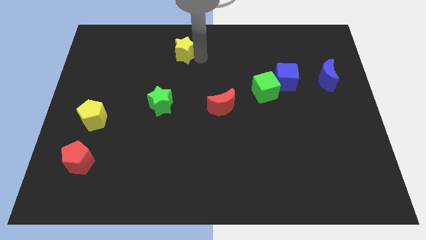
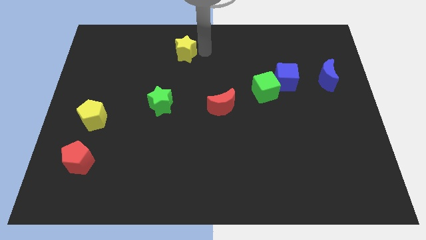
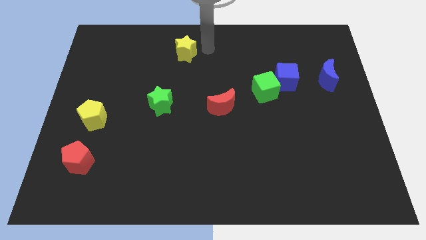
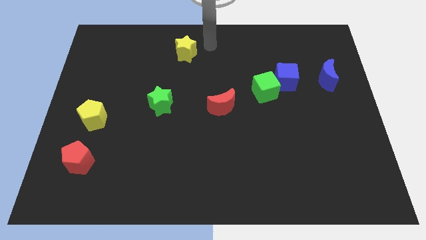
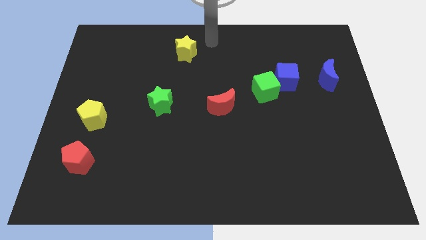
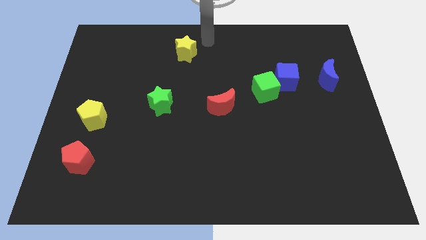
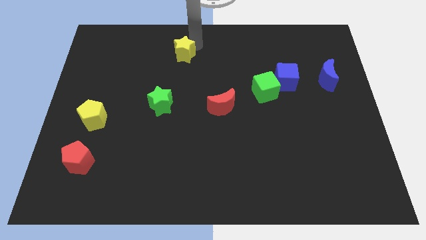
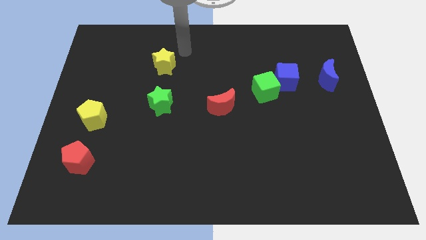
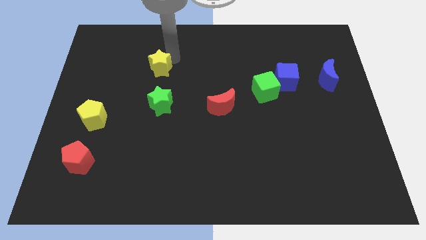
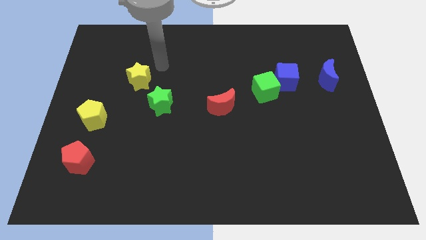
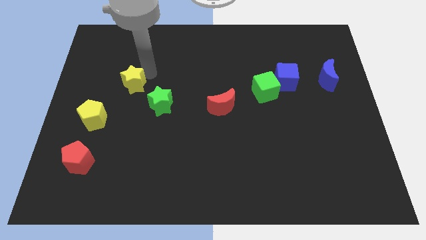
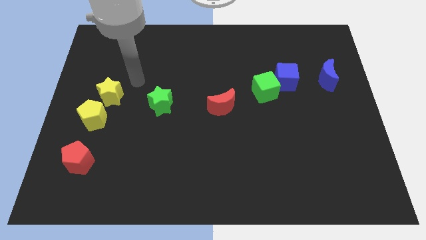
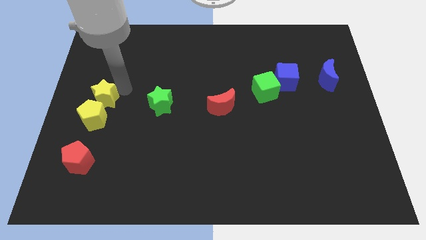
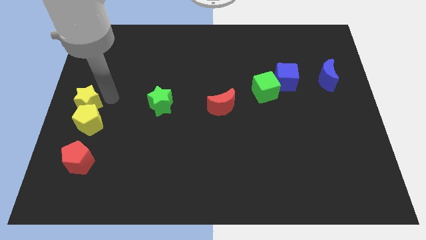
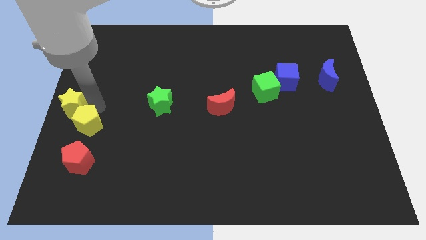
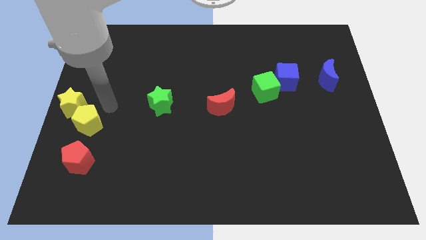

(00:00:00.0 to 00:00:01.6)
push the yellow star into the yellow pentagon

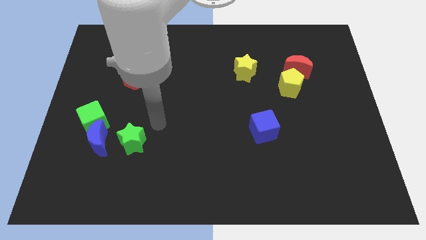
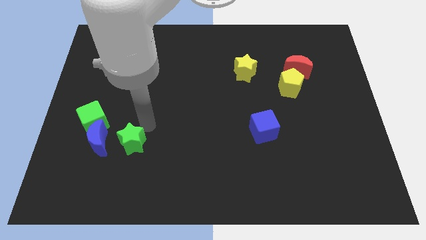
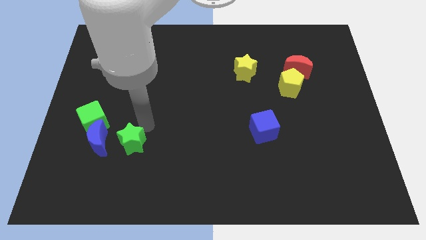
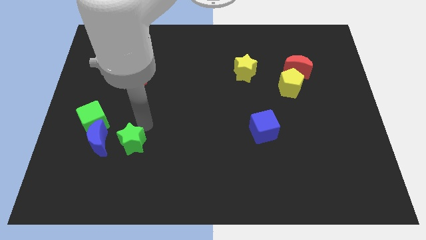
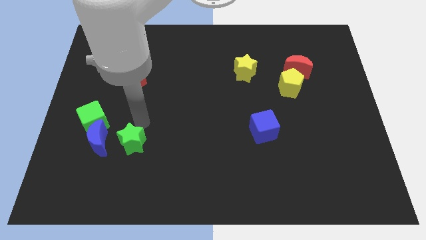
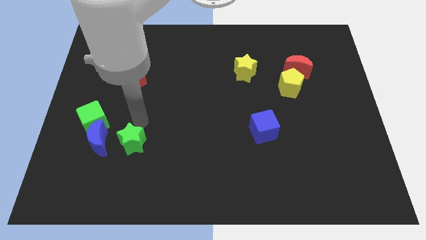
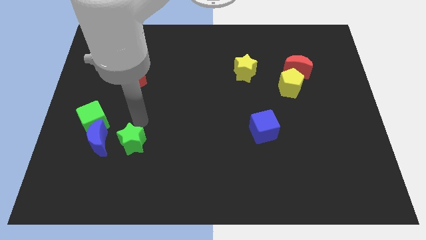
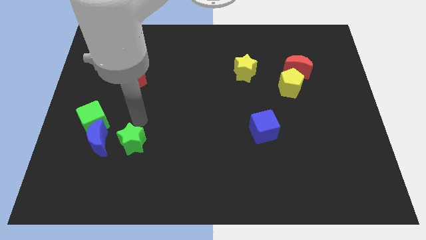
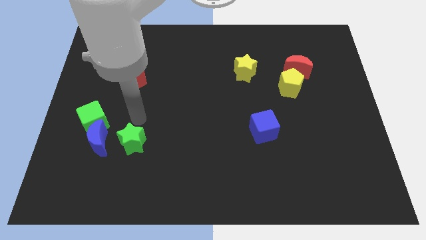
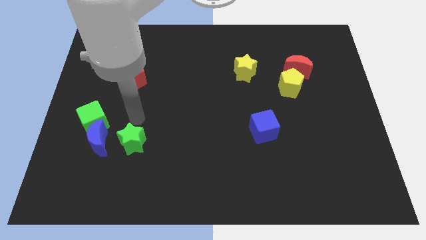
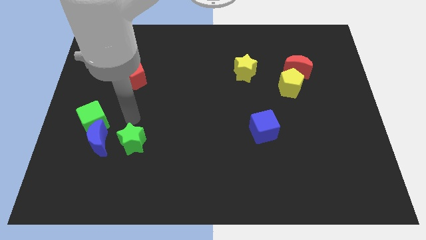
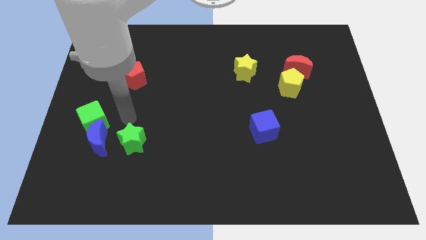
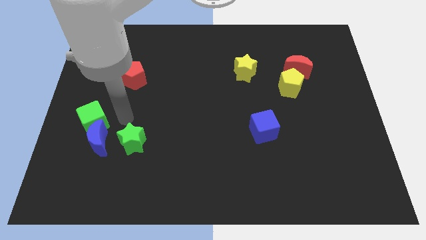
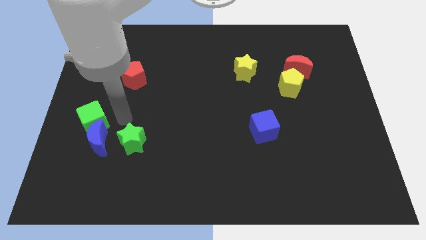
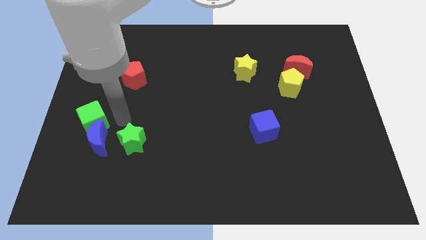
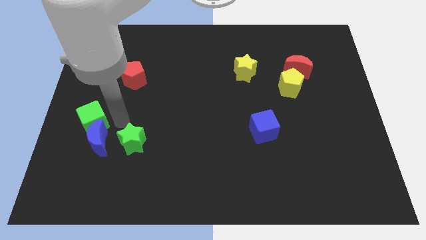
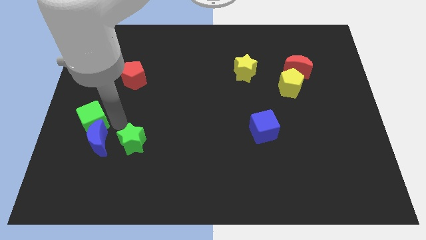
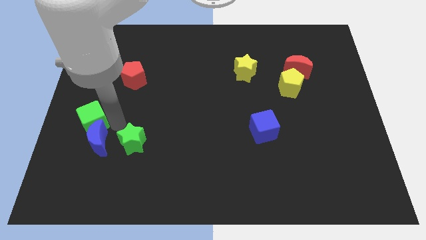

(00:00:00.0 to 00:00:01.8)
place your hand in between the green blocks

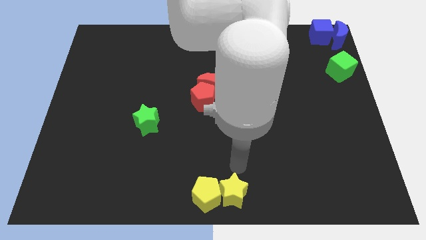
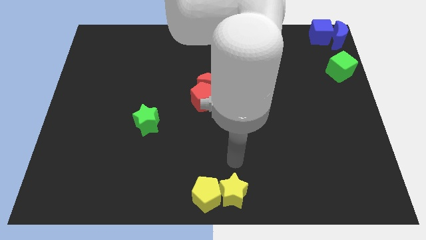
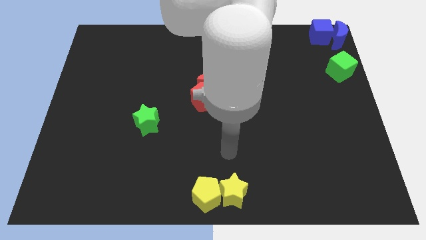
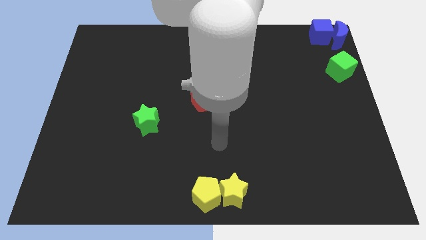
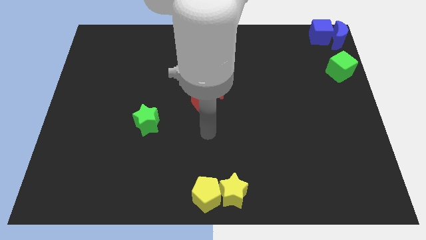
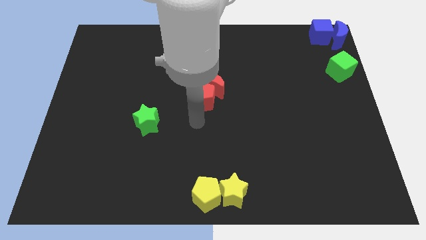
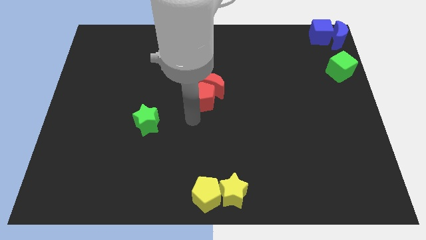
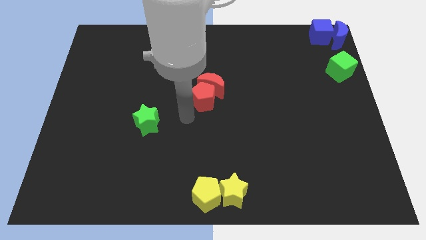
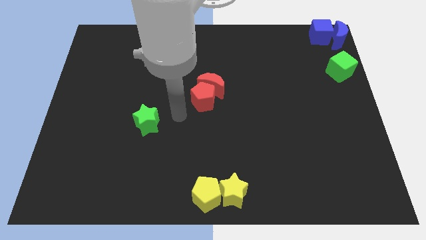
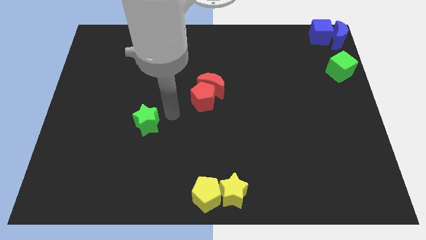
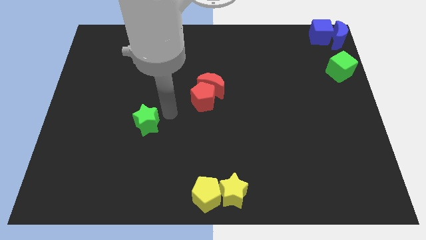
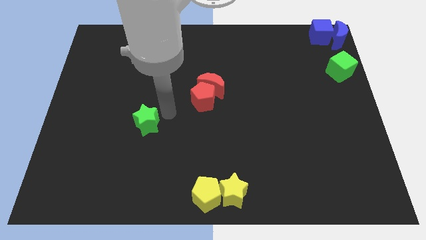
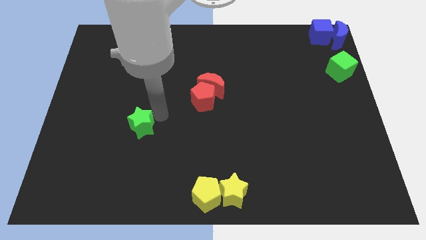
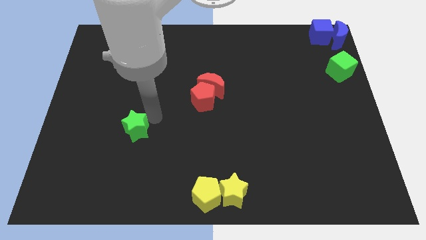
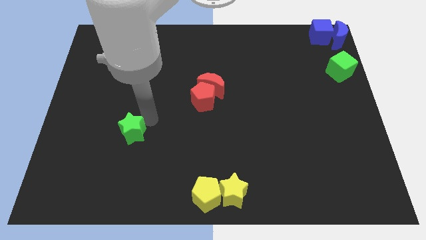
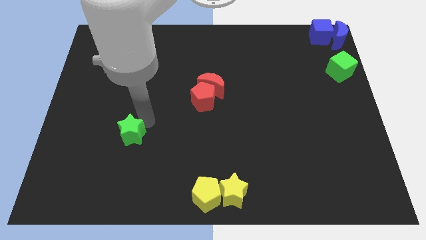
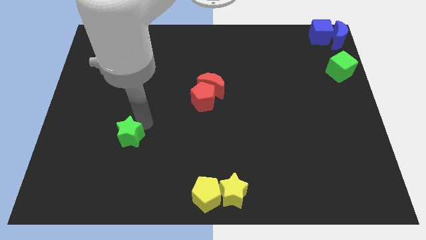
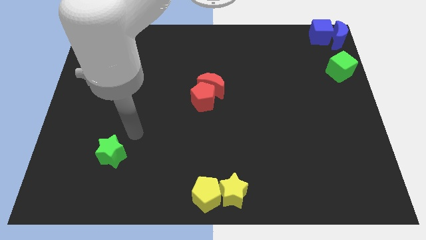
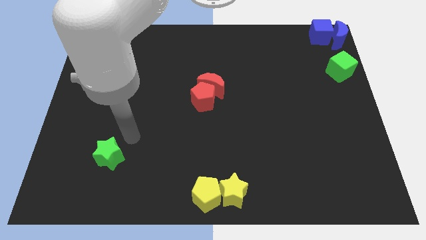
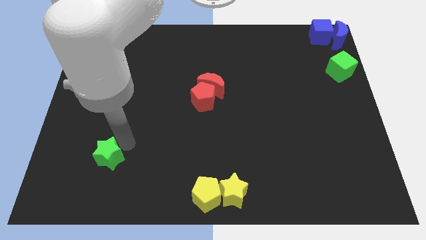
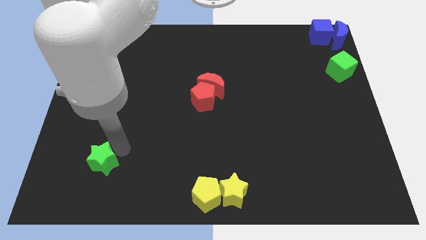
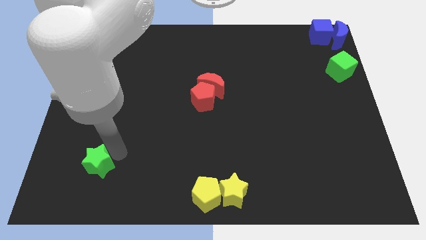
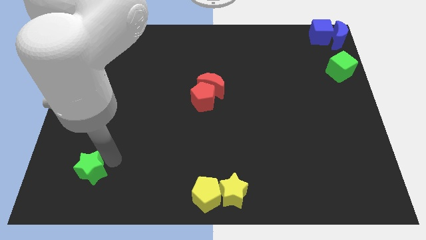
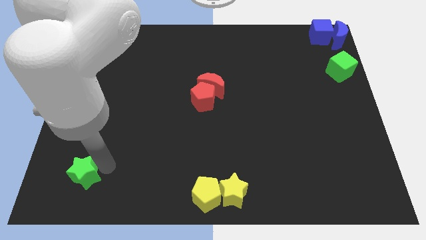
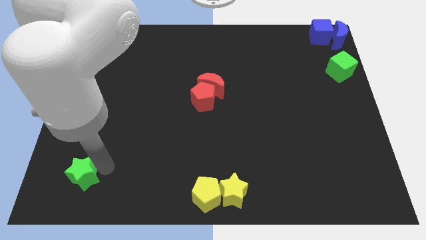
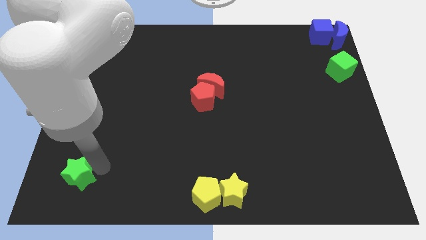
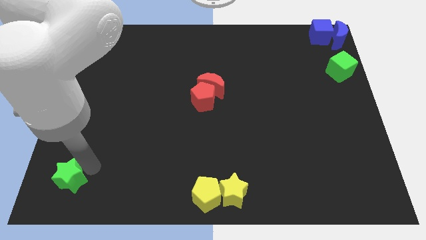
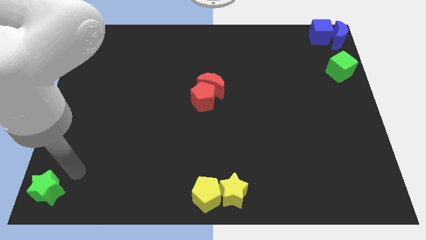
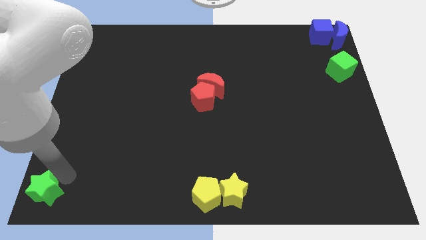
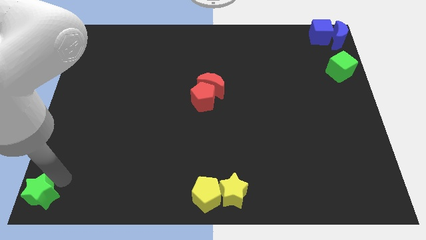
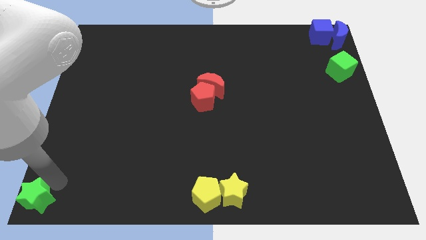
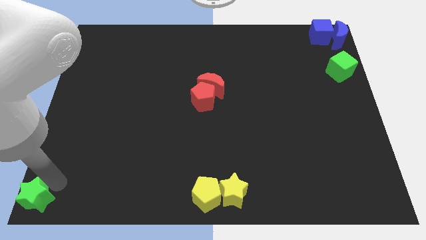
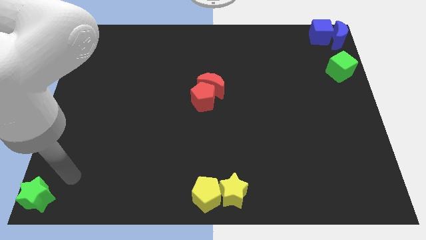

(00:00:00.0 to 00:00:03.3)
move the green star at the bottom left corner

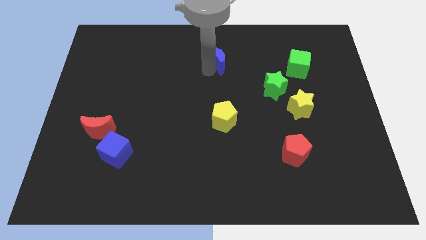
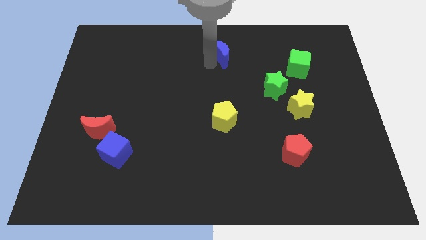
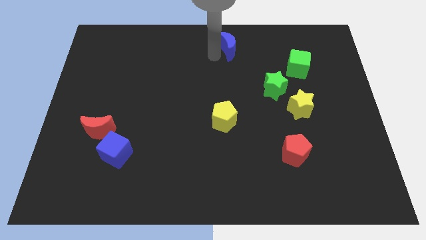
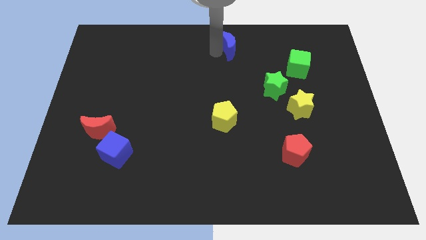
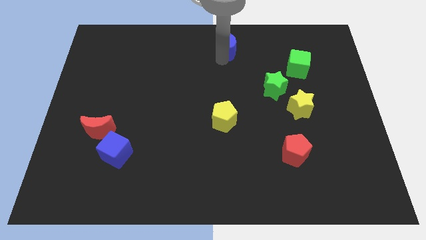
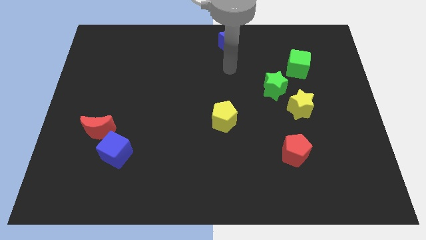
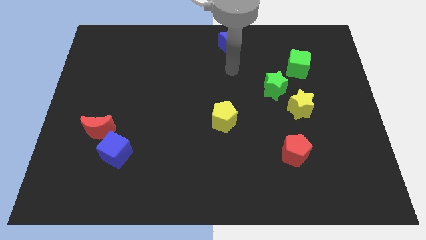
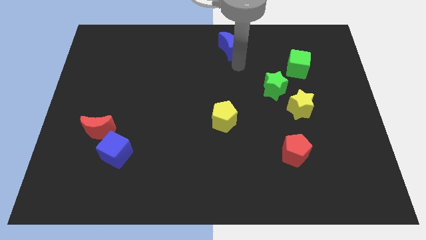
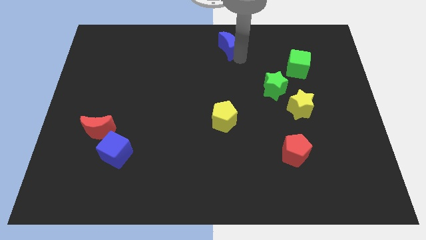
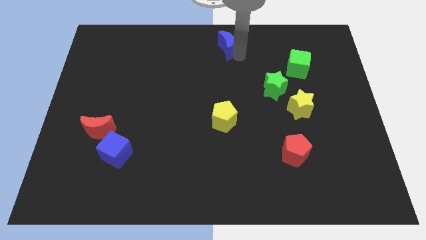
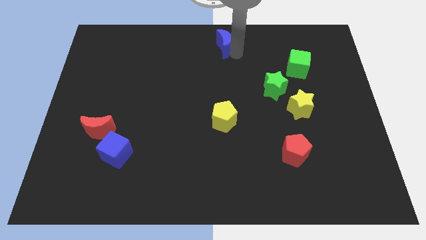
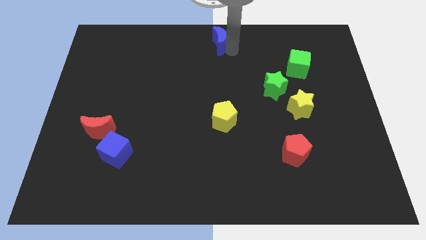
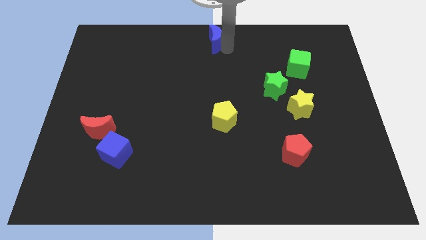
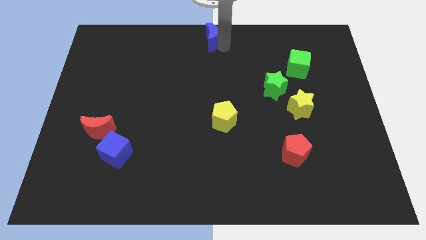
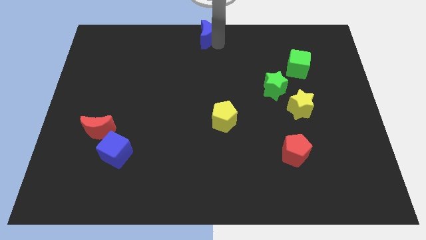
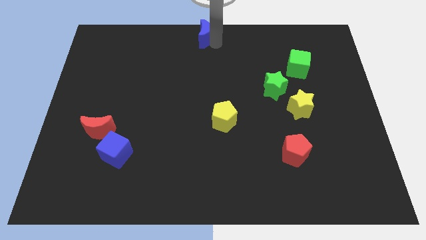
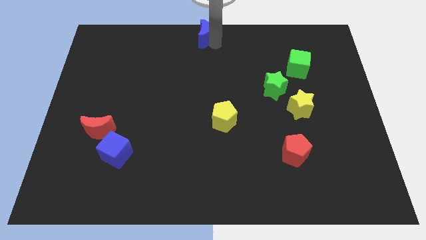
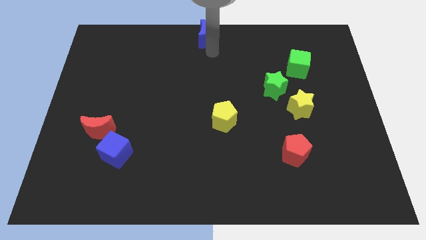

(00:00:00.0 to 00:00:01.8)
move the blue moon to the top middle

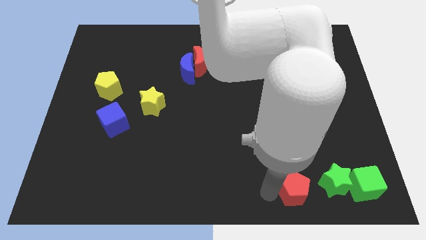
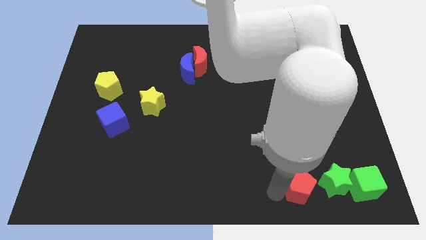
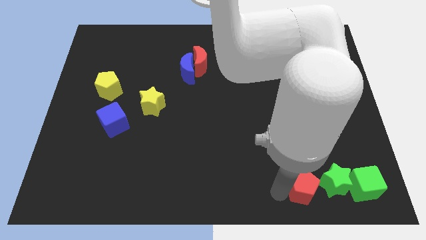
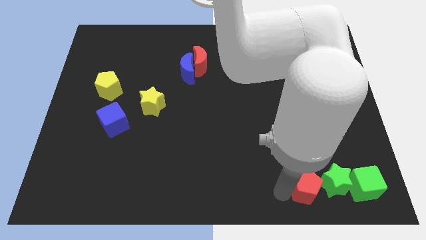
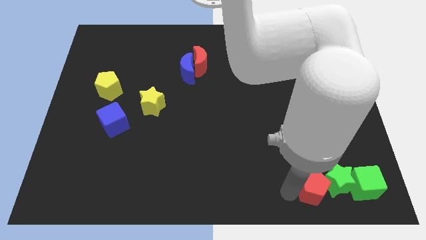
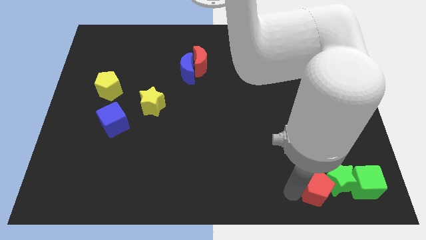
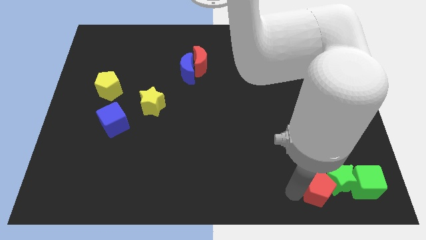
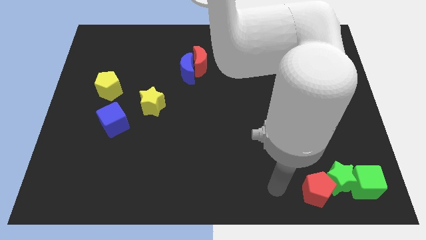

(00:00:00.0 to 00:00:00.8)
place the red pentagon to the left of the green star
